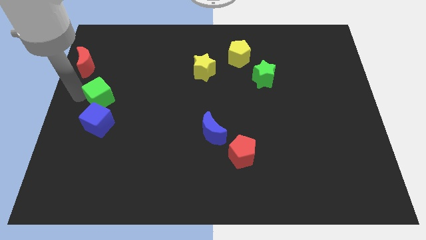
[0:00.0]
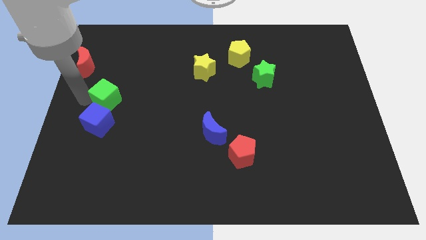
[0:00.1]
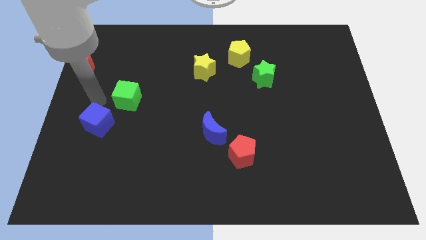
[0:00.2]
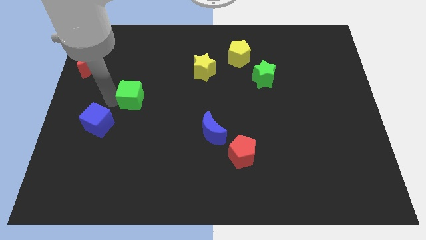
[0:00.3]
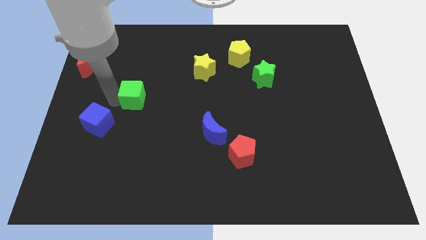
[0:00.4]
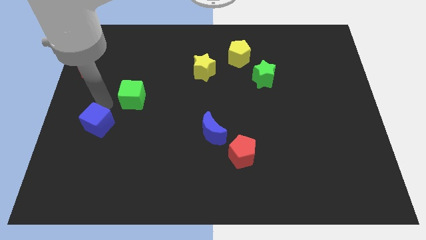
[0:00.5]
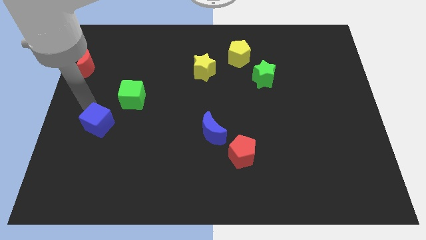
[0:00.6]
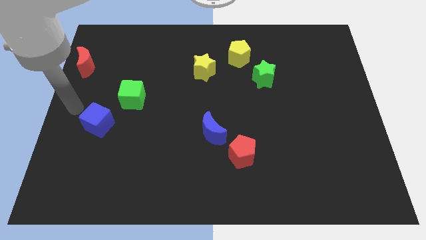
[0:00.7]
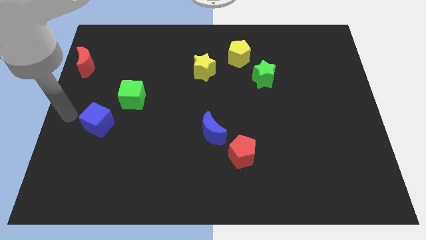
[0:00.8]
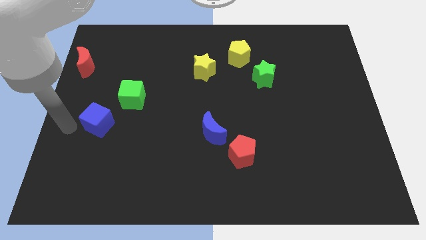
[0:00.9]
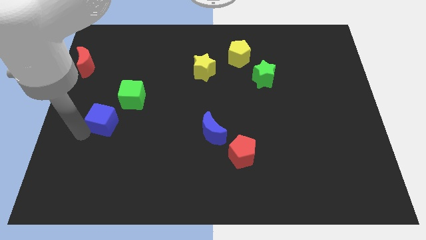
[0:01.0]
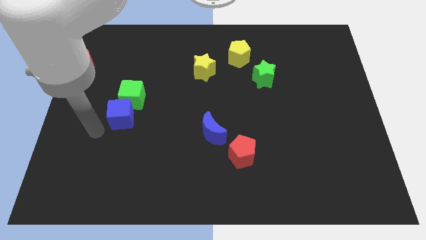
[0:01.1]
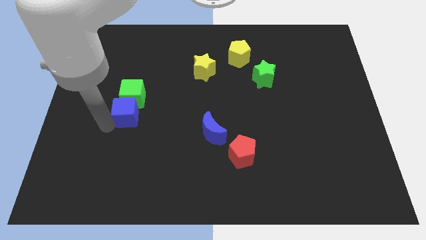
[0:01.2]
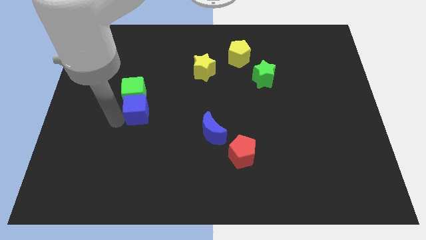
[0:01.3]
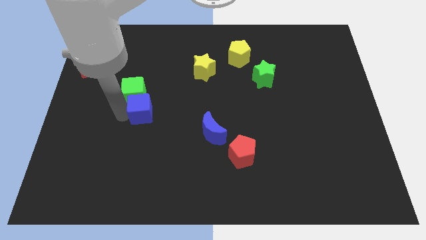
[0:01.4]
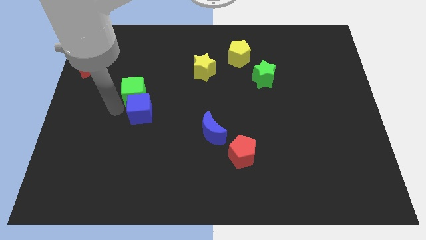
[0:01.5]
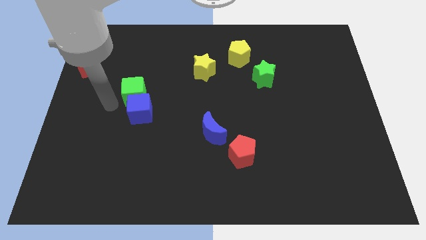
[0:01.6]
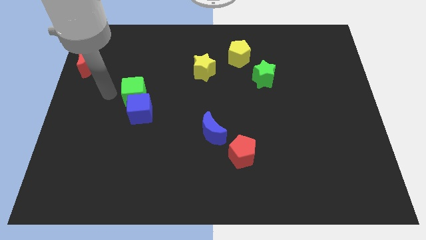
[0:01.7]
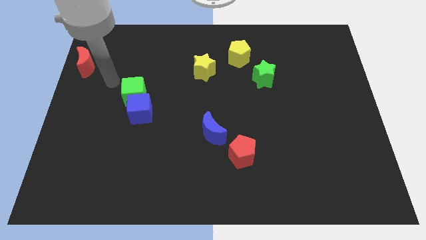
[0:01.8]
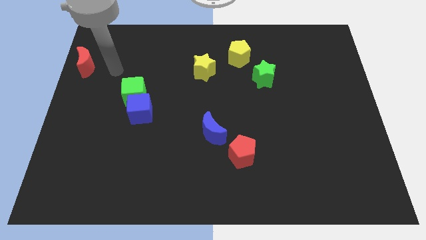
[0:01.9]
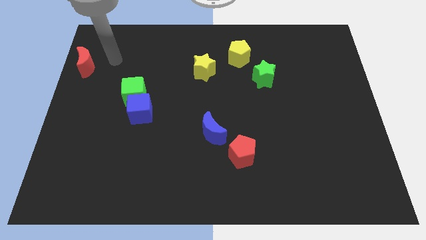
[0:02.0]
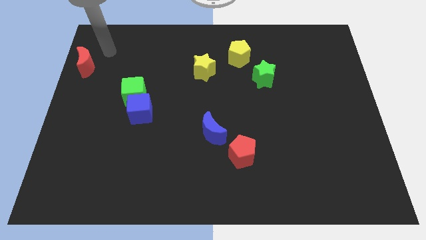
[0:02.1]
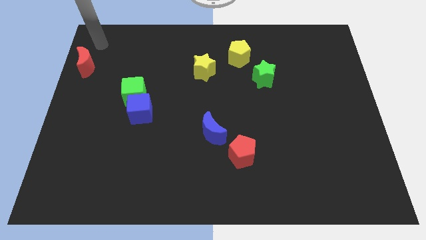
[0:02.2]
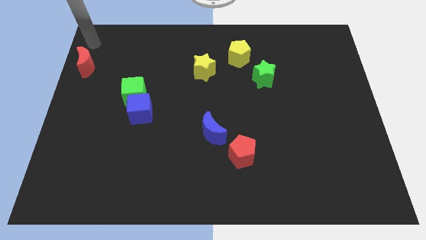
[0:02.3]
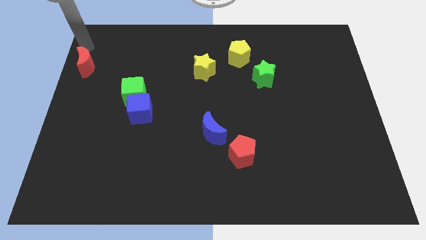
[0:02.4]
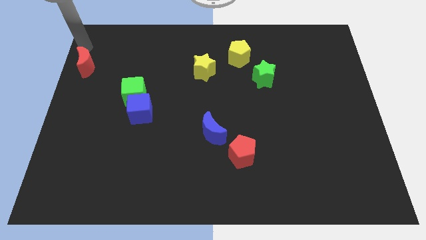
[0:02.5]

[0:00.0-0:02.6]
place the green cube and blue cube together

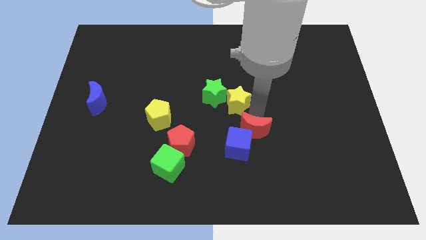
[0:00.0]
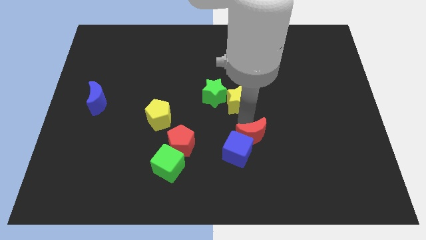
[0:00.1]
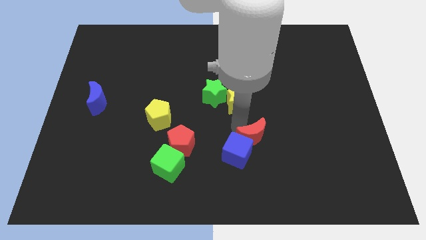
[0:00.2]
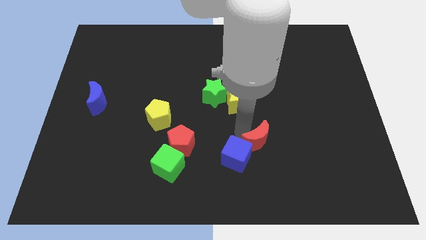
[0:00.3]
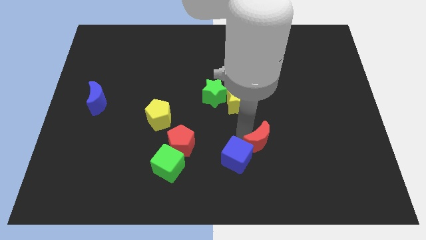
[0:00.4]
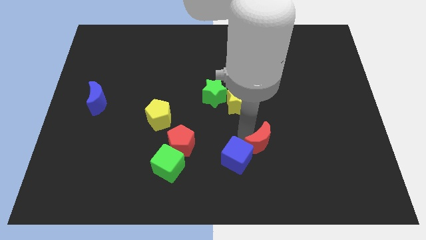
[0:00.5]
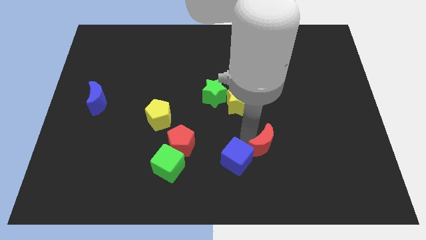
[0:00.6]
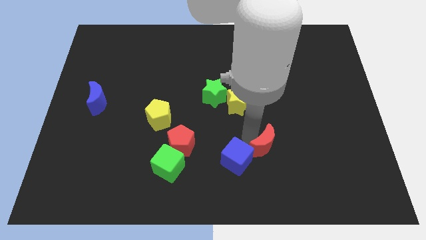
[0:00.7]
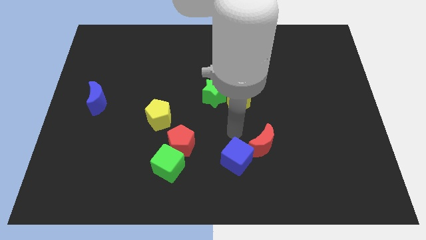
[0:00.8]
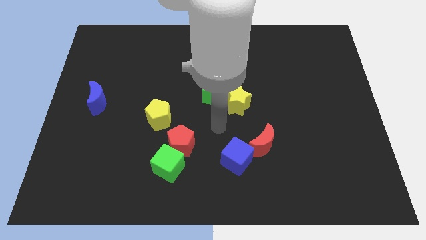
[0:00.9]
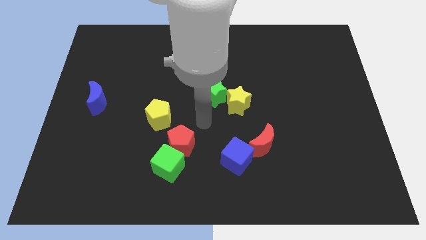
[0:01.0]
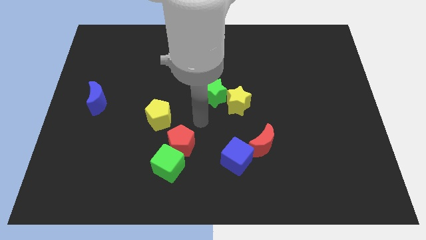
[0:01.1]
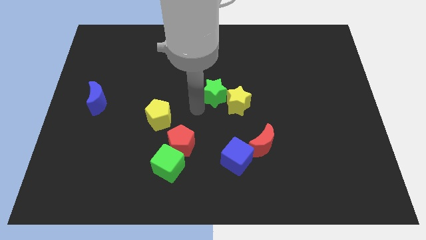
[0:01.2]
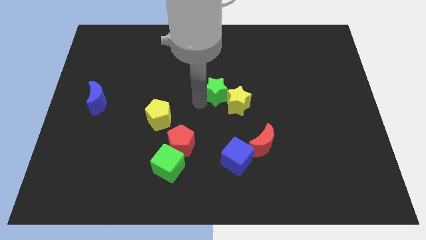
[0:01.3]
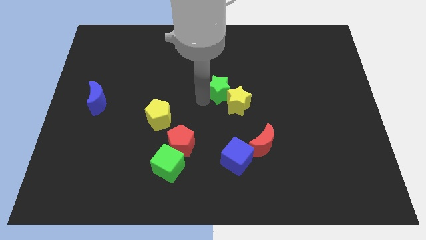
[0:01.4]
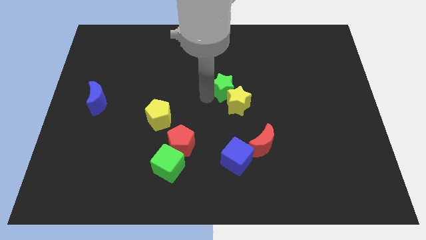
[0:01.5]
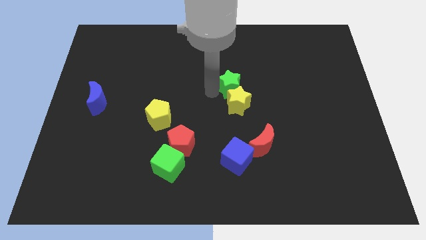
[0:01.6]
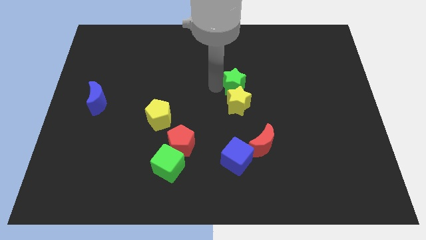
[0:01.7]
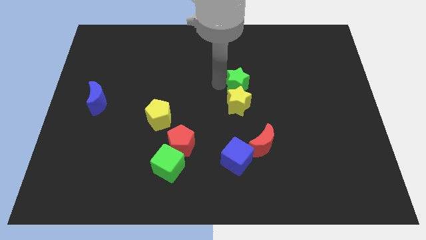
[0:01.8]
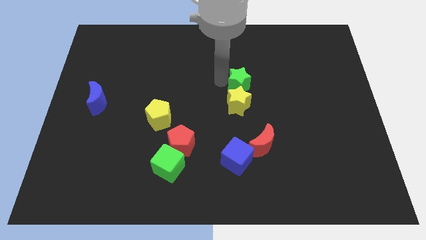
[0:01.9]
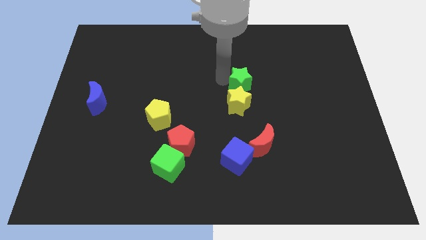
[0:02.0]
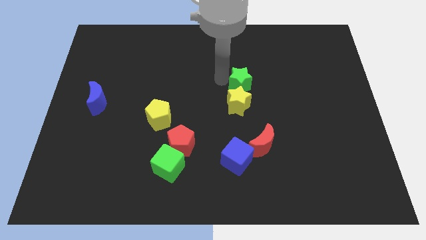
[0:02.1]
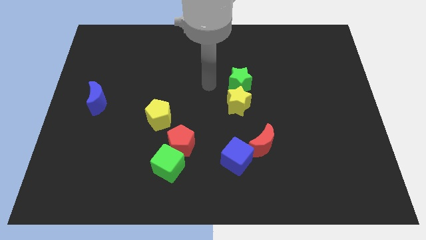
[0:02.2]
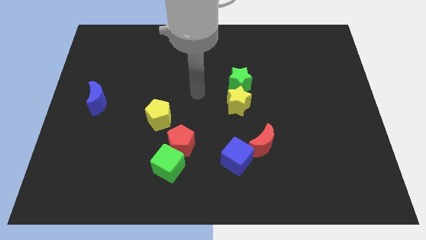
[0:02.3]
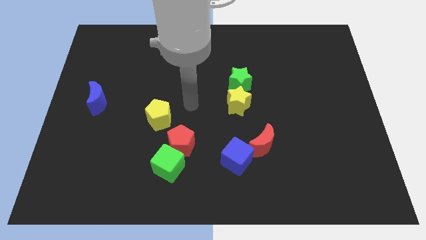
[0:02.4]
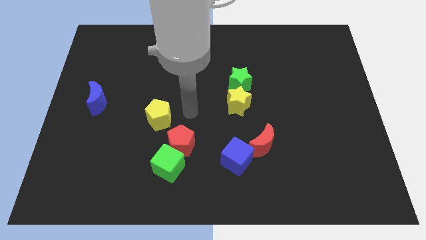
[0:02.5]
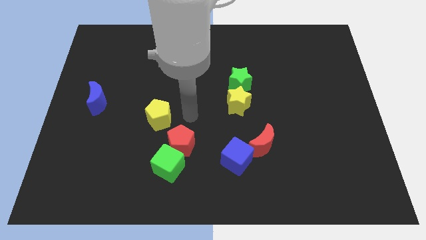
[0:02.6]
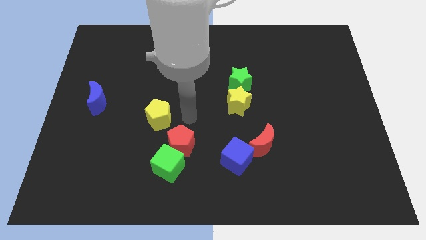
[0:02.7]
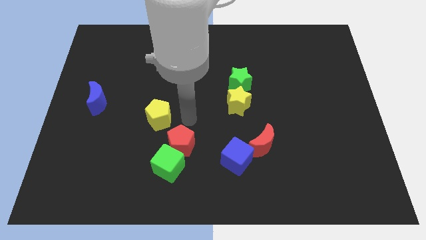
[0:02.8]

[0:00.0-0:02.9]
push the green star vertically above the top side of the yellow star

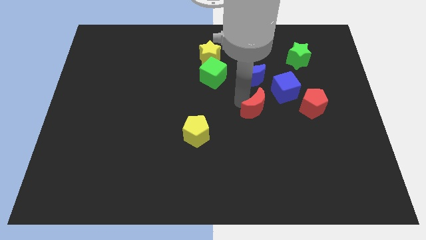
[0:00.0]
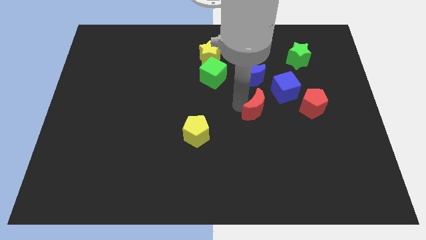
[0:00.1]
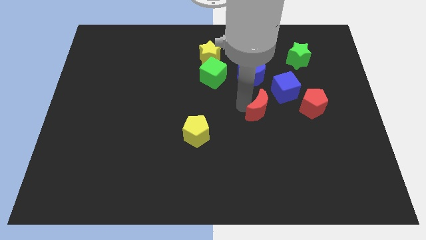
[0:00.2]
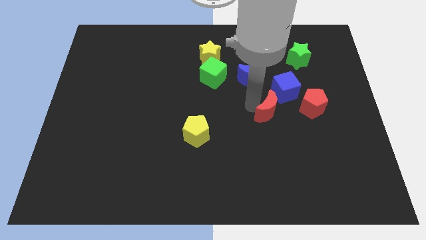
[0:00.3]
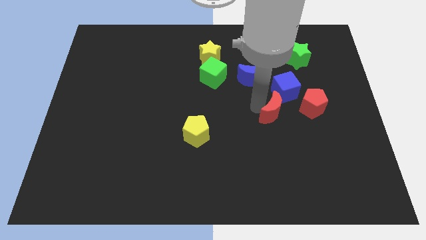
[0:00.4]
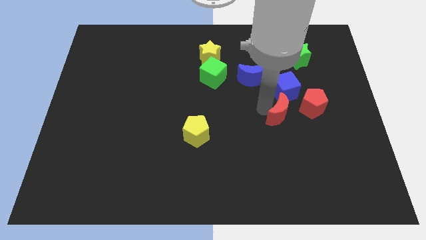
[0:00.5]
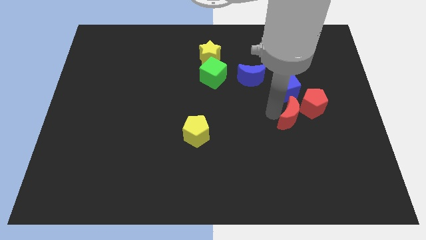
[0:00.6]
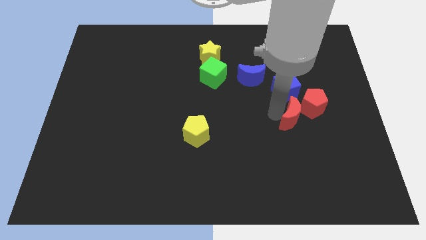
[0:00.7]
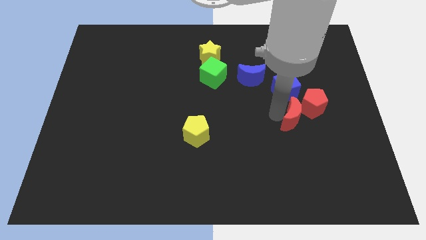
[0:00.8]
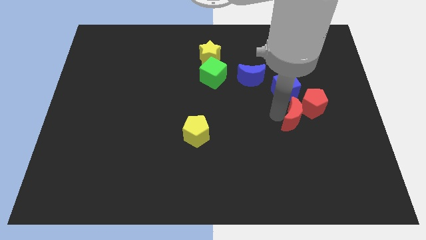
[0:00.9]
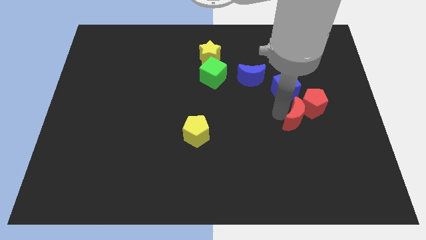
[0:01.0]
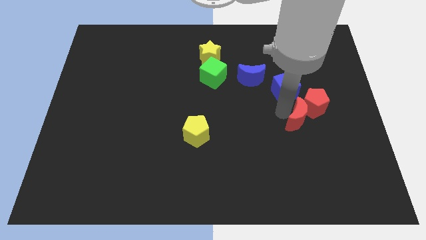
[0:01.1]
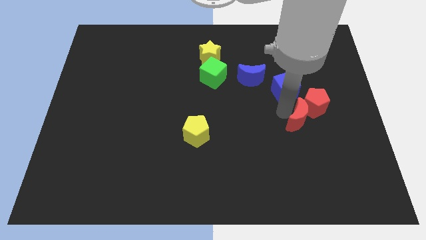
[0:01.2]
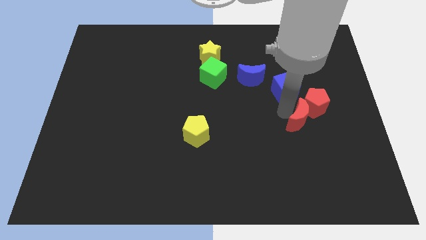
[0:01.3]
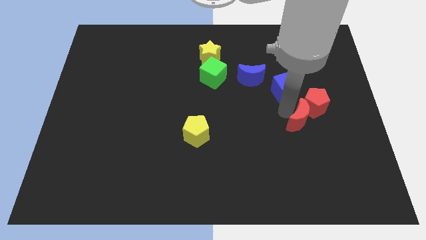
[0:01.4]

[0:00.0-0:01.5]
move red moon close to red pentagon

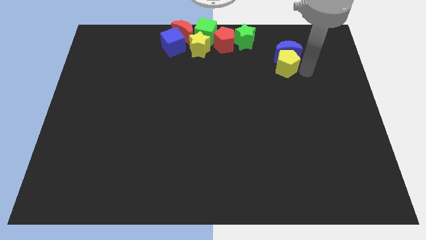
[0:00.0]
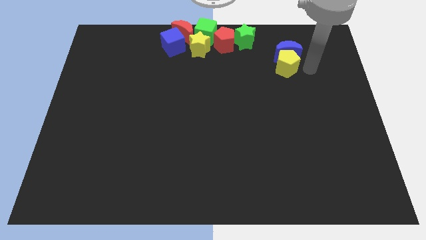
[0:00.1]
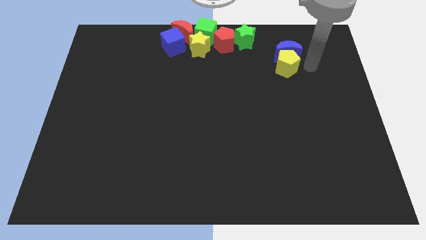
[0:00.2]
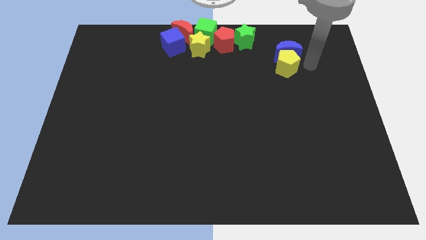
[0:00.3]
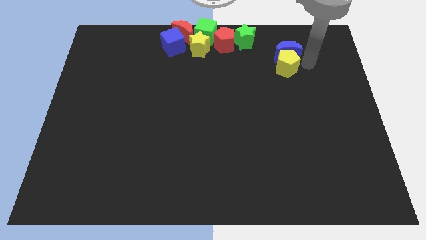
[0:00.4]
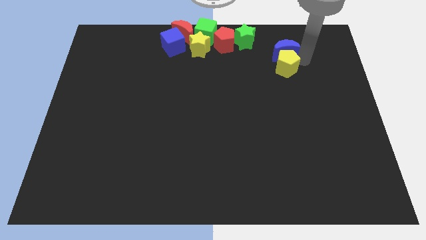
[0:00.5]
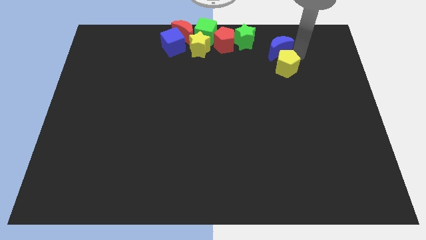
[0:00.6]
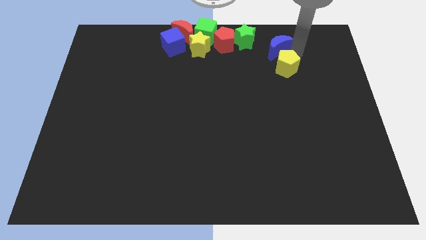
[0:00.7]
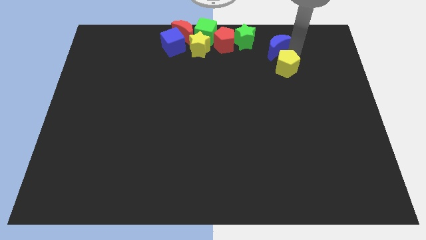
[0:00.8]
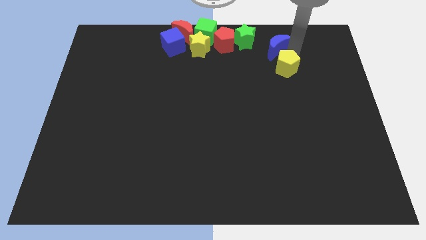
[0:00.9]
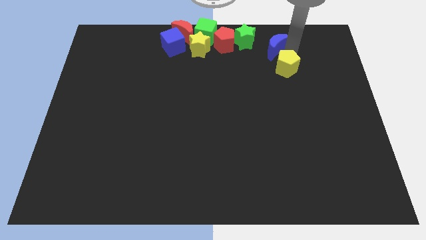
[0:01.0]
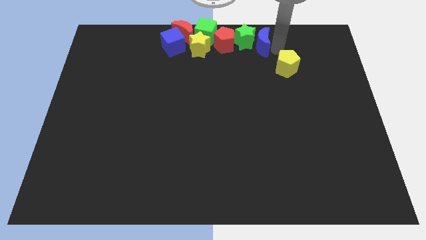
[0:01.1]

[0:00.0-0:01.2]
separate the blue moon from the yellow pentagon

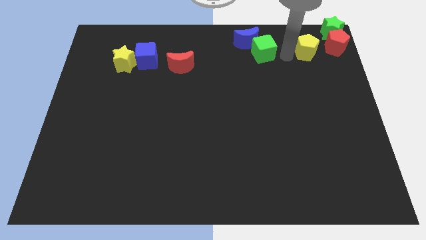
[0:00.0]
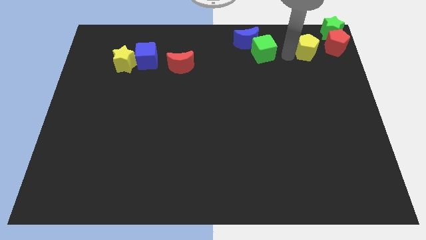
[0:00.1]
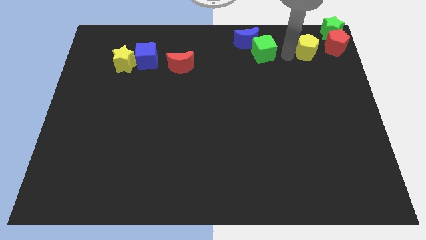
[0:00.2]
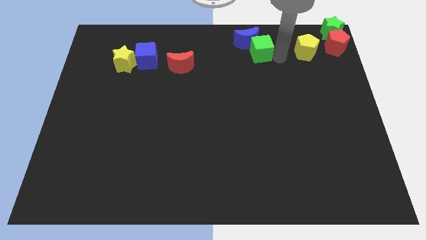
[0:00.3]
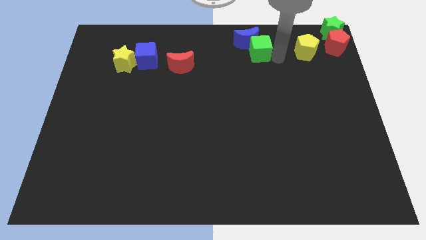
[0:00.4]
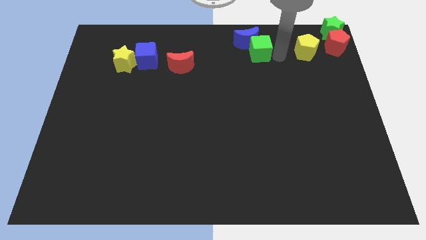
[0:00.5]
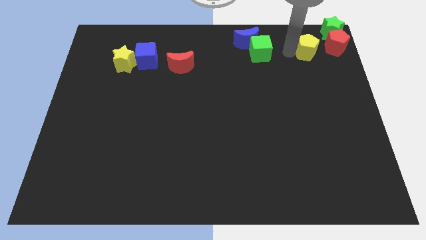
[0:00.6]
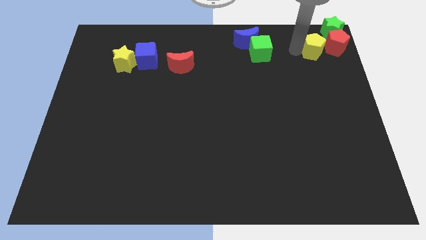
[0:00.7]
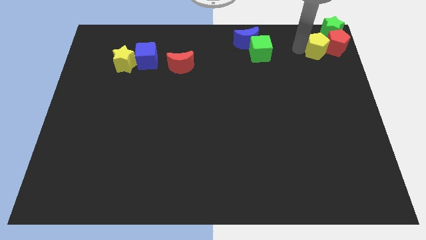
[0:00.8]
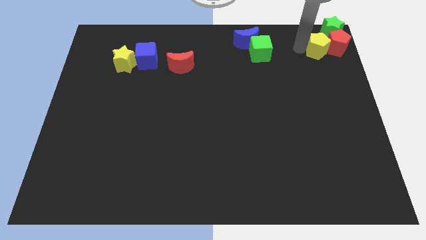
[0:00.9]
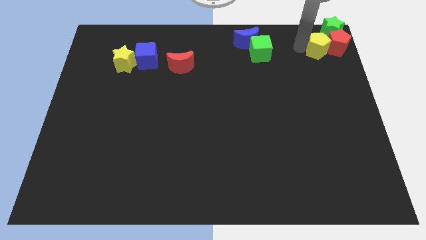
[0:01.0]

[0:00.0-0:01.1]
push yellow pentagon into red pentagon
